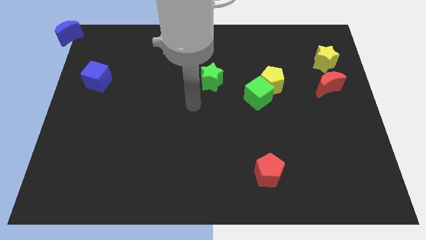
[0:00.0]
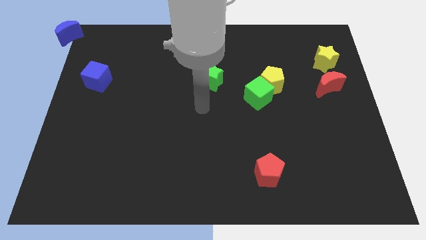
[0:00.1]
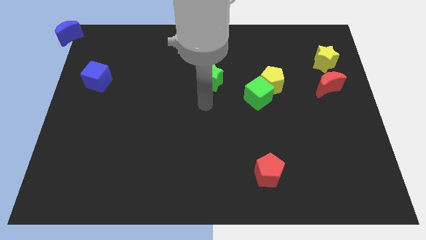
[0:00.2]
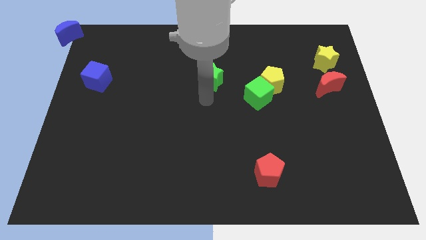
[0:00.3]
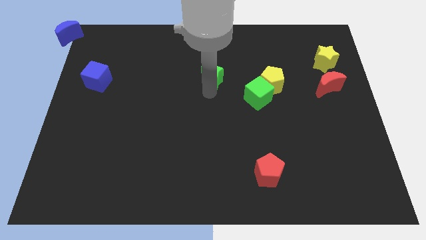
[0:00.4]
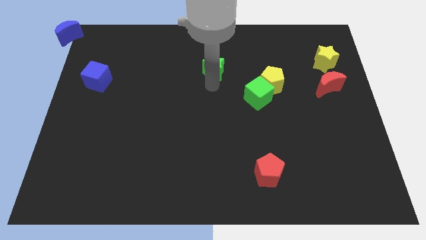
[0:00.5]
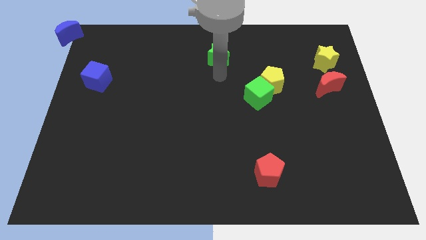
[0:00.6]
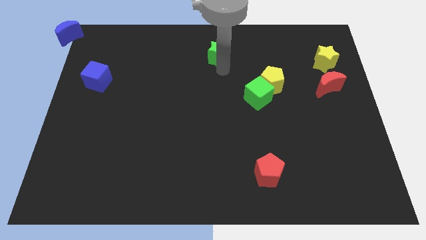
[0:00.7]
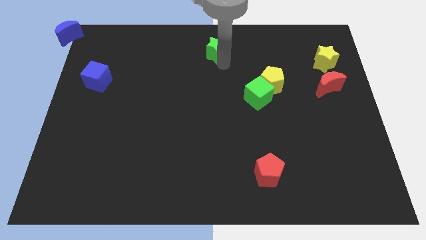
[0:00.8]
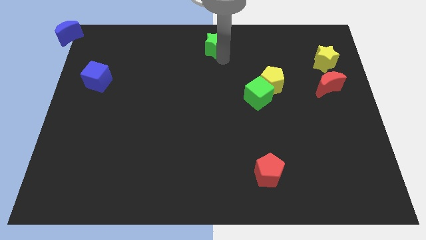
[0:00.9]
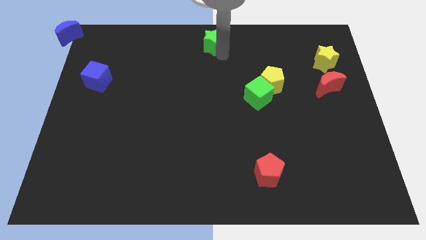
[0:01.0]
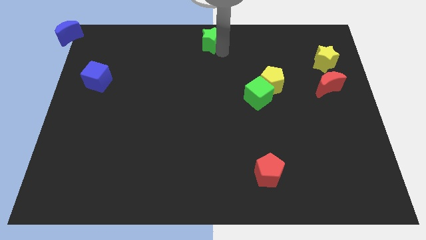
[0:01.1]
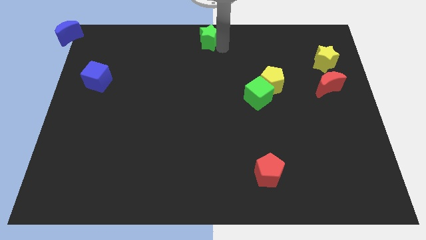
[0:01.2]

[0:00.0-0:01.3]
push the green star towards the top side of the board

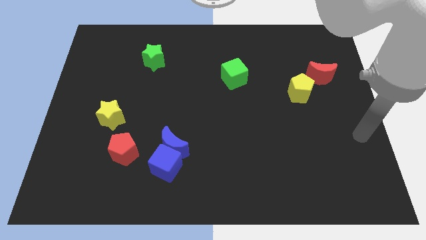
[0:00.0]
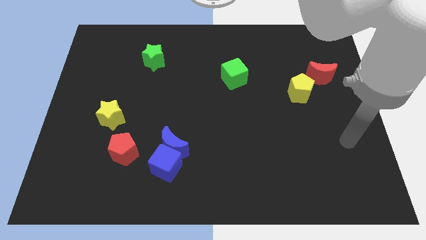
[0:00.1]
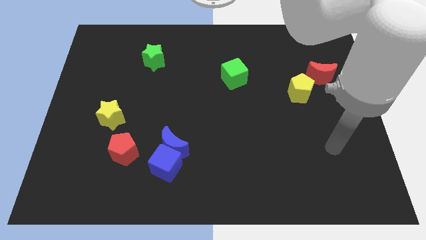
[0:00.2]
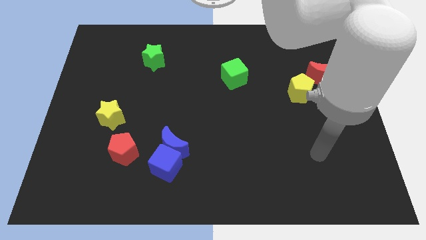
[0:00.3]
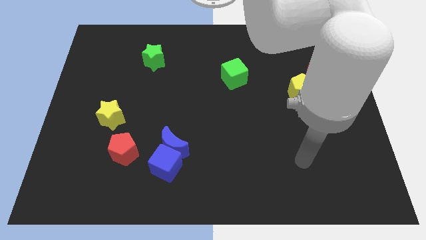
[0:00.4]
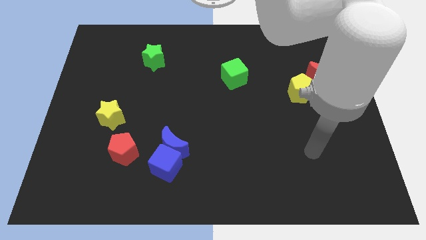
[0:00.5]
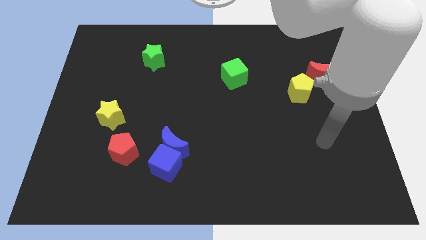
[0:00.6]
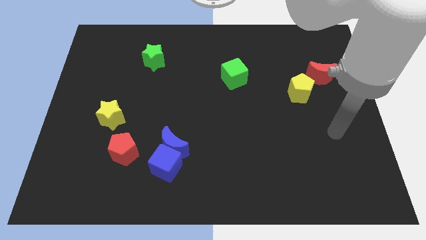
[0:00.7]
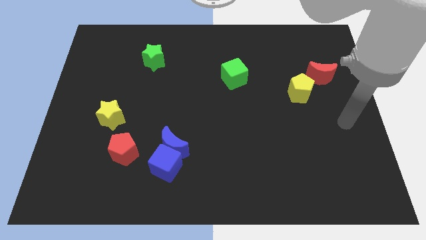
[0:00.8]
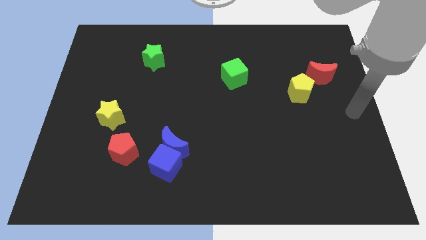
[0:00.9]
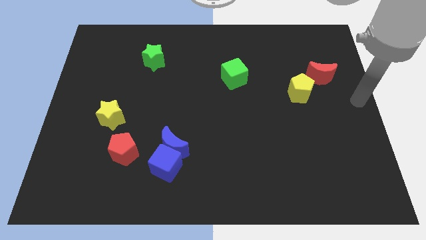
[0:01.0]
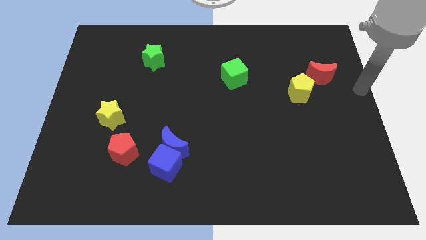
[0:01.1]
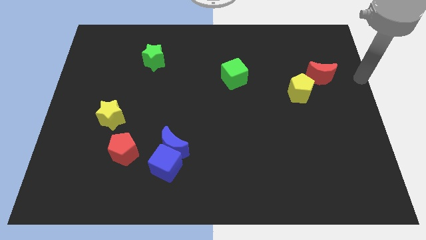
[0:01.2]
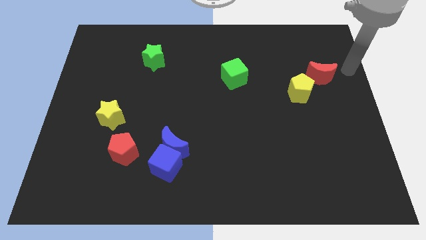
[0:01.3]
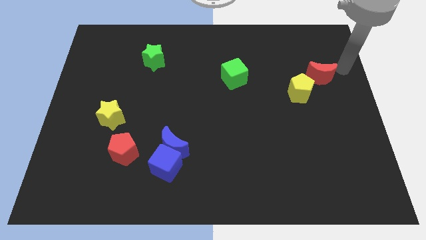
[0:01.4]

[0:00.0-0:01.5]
place your arm to the right side of the red moon

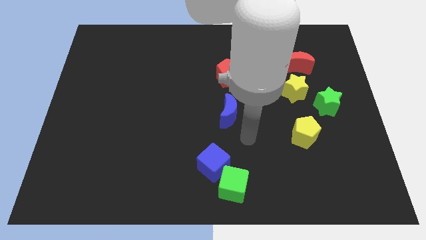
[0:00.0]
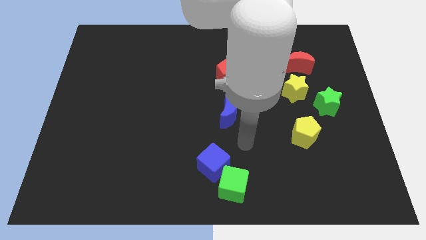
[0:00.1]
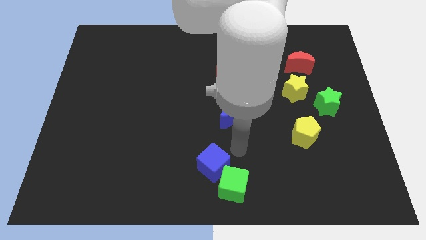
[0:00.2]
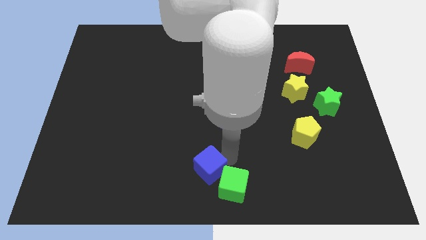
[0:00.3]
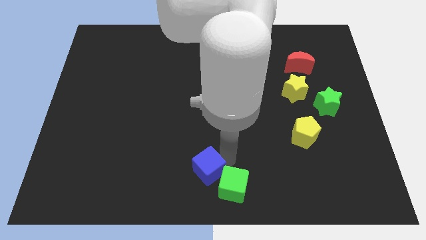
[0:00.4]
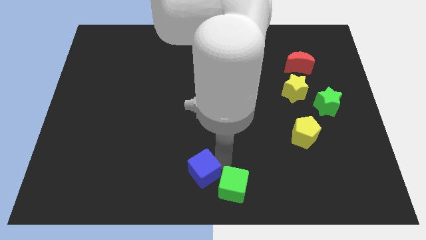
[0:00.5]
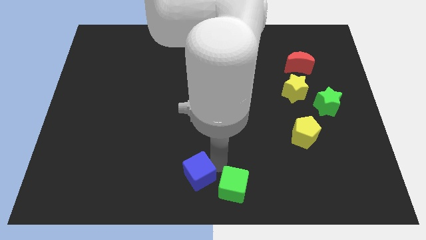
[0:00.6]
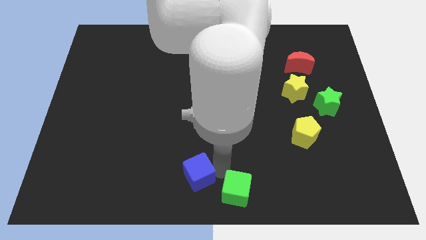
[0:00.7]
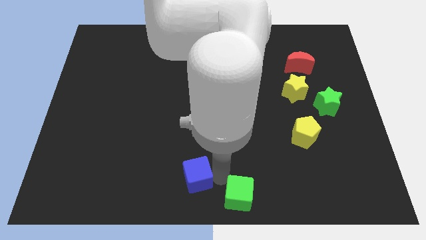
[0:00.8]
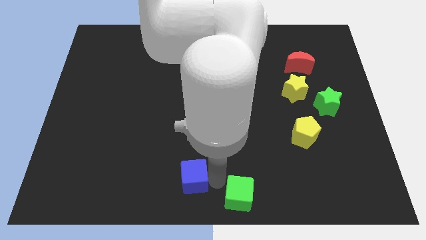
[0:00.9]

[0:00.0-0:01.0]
point your arm between green cube and blue cube

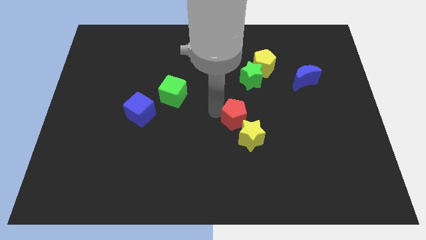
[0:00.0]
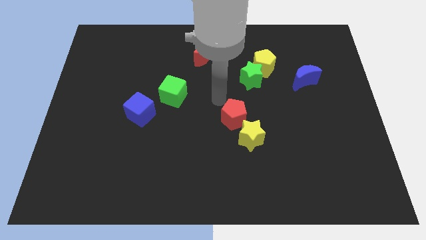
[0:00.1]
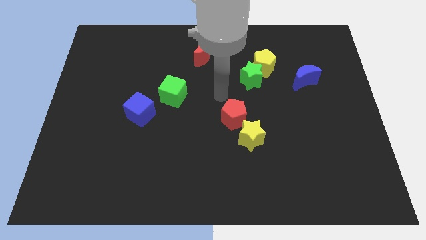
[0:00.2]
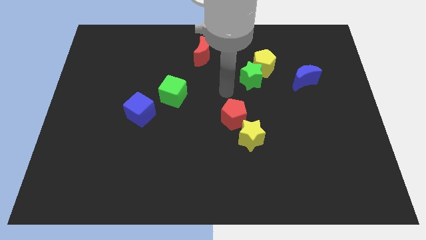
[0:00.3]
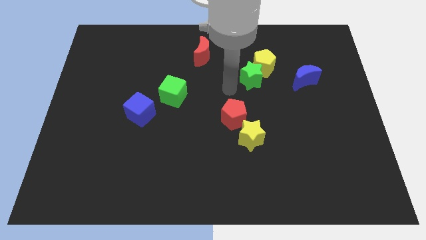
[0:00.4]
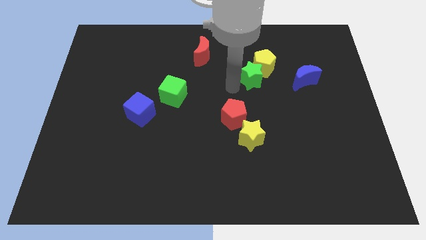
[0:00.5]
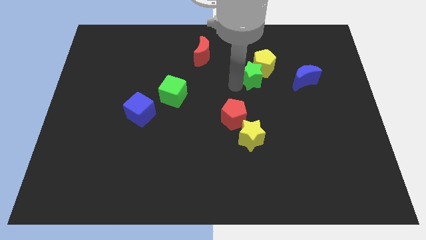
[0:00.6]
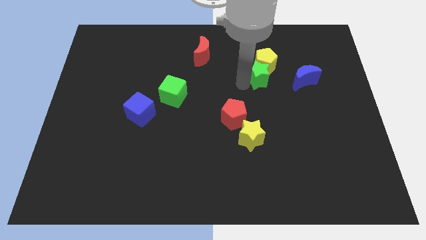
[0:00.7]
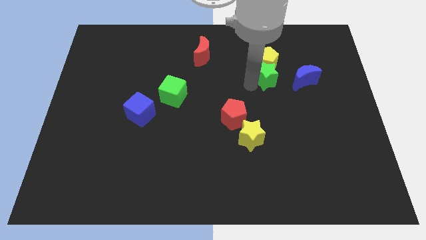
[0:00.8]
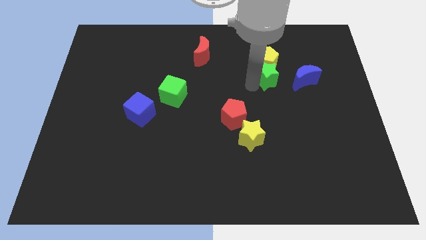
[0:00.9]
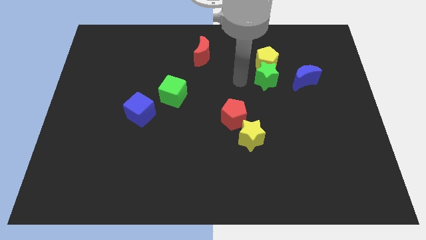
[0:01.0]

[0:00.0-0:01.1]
adjust the green star to the bottom of the yellow pentagon

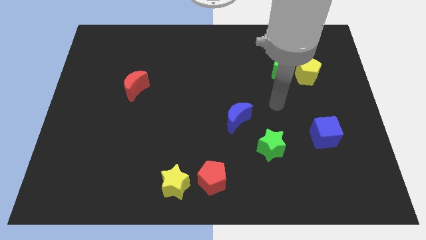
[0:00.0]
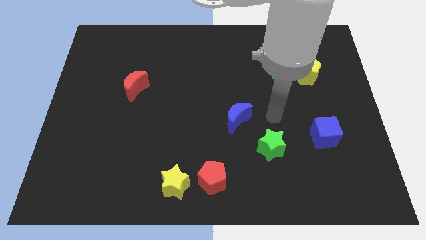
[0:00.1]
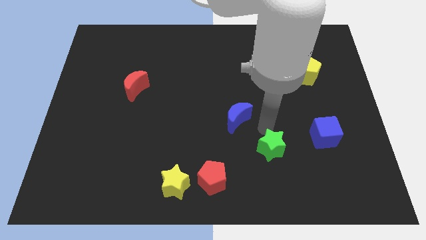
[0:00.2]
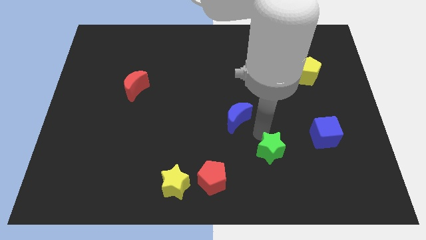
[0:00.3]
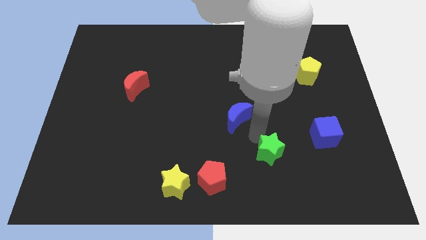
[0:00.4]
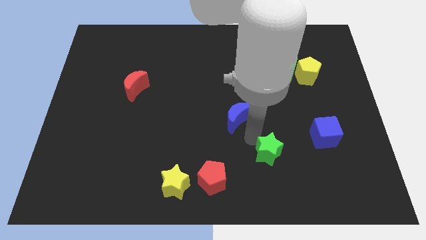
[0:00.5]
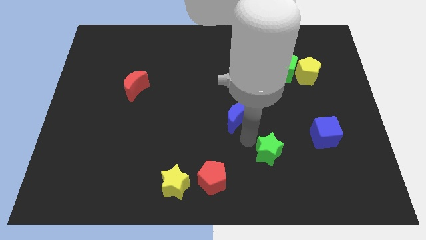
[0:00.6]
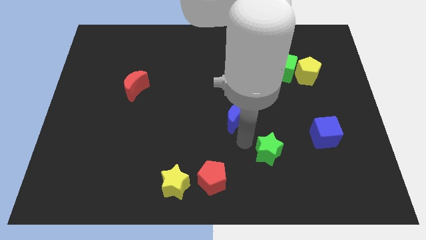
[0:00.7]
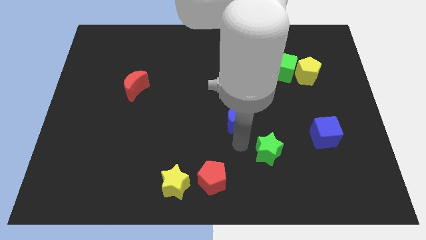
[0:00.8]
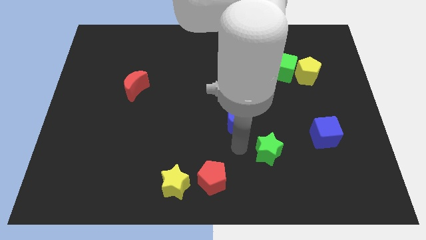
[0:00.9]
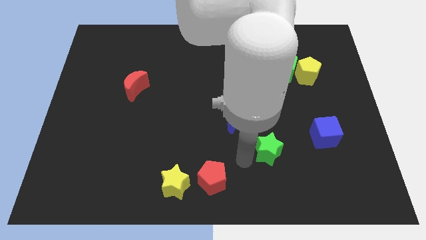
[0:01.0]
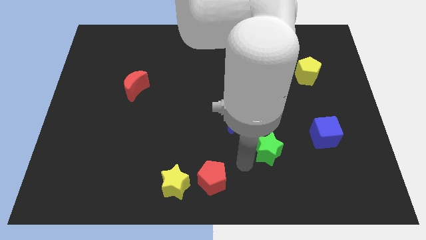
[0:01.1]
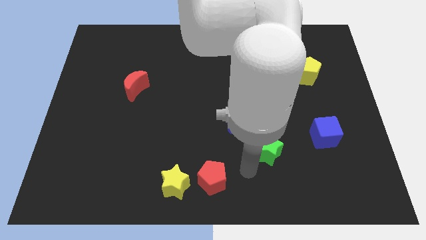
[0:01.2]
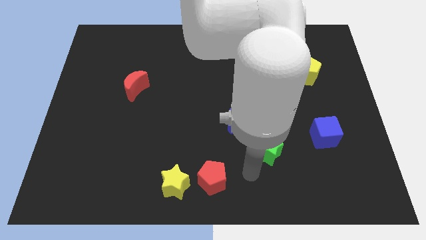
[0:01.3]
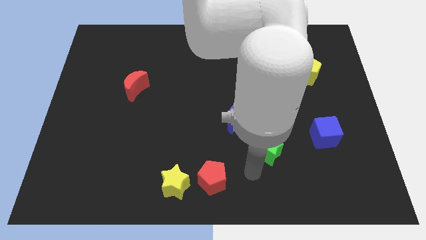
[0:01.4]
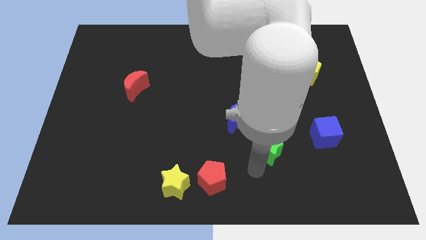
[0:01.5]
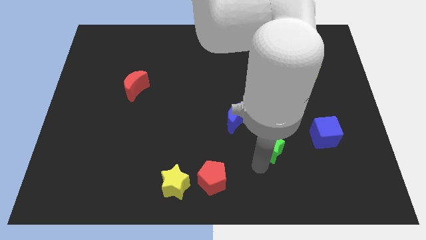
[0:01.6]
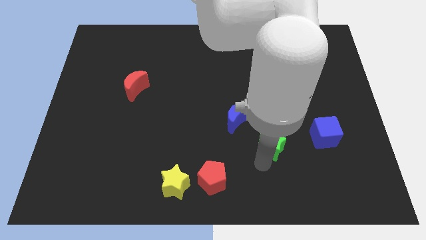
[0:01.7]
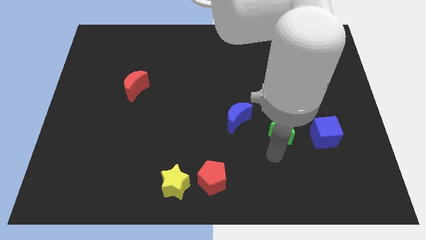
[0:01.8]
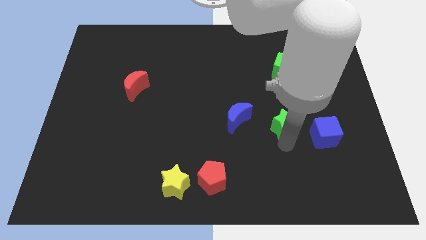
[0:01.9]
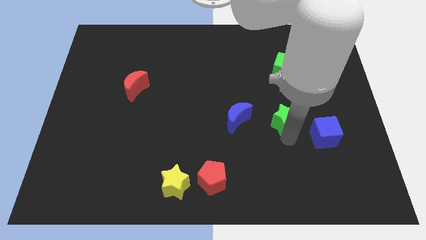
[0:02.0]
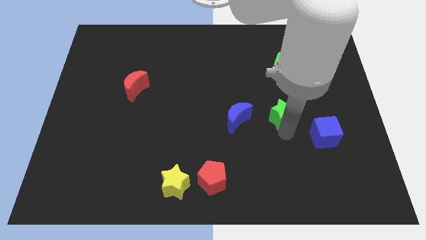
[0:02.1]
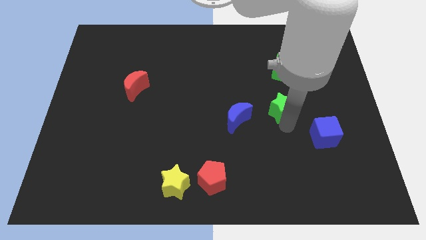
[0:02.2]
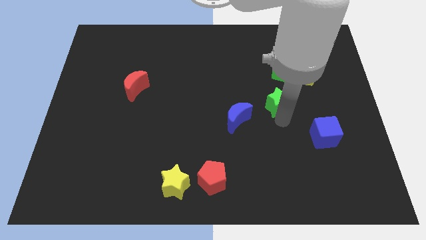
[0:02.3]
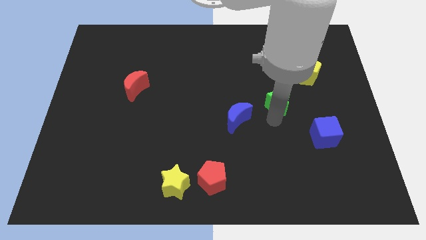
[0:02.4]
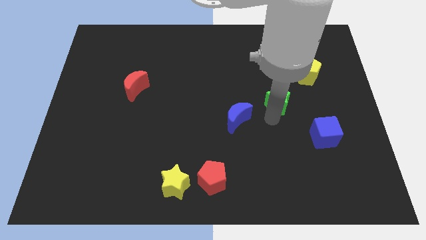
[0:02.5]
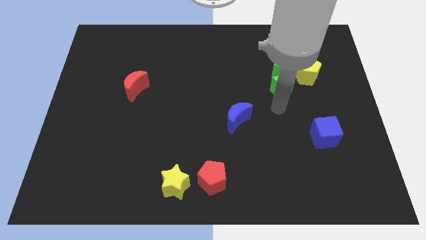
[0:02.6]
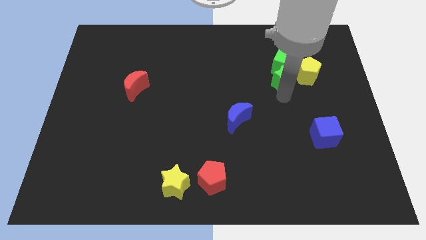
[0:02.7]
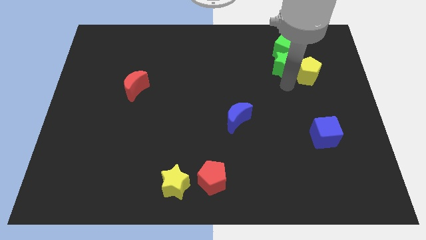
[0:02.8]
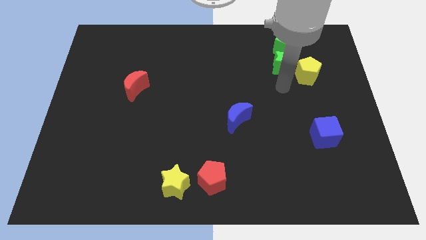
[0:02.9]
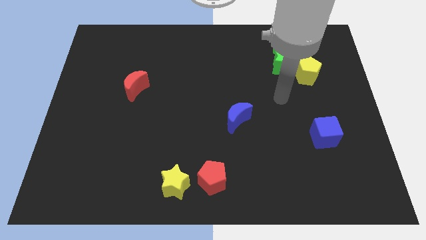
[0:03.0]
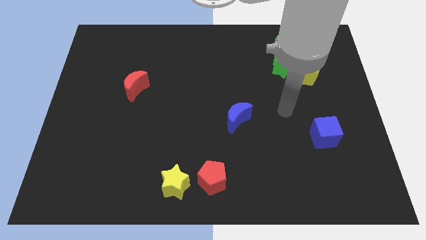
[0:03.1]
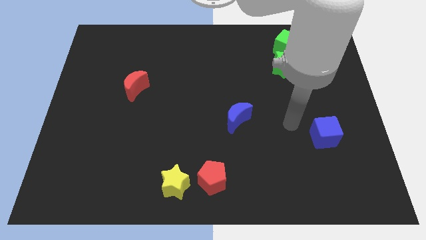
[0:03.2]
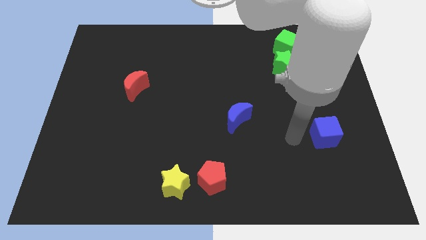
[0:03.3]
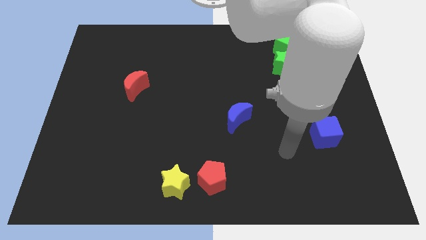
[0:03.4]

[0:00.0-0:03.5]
push the green star below the green cube

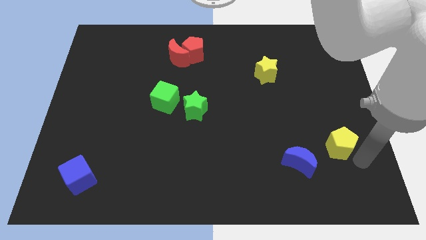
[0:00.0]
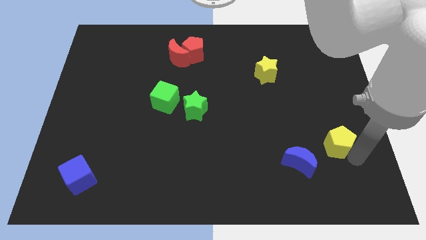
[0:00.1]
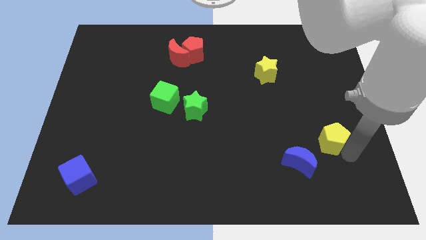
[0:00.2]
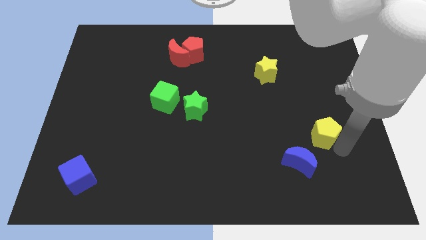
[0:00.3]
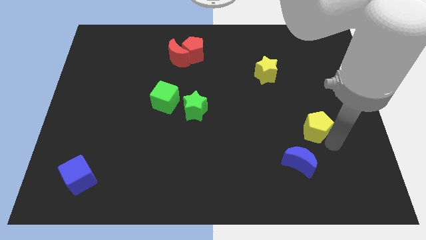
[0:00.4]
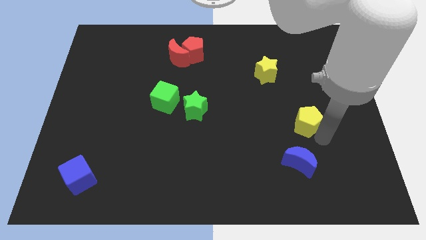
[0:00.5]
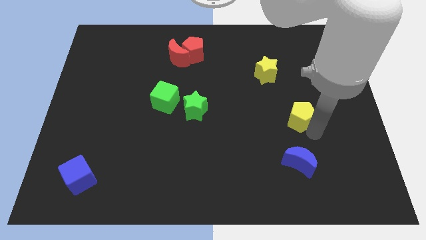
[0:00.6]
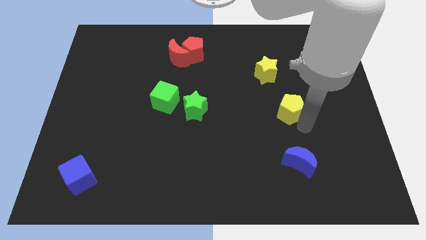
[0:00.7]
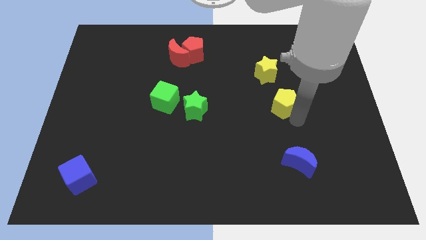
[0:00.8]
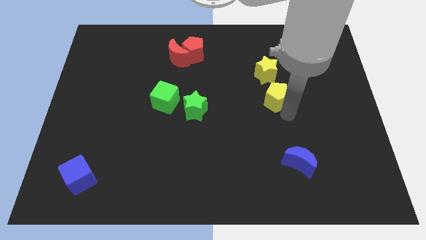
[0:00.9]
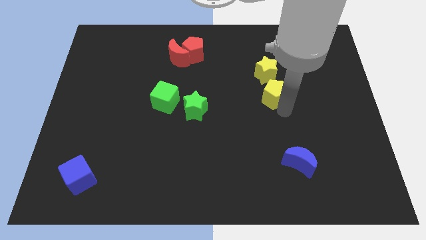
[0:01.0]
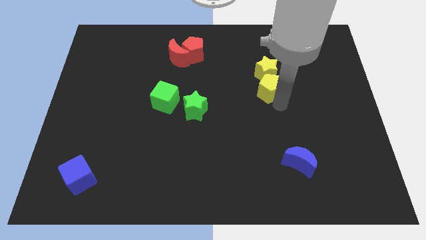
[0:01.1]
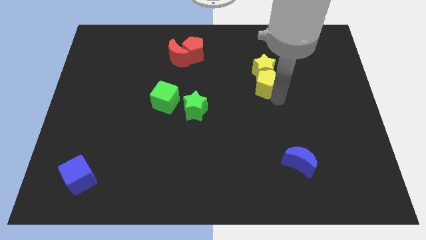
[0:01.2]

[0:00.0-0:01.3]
move yellow pentagon into yellow star
